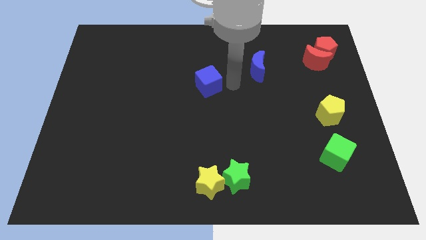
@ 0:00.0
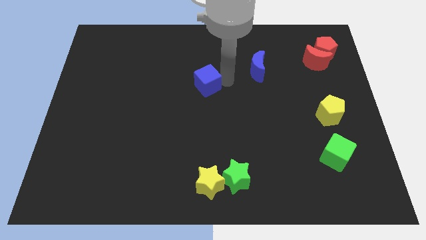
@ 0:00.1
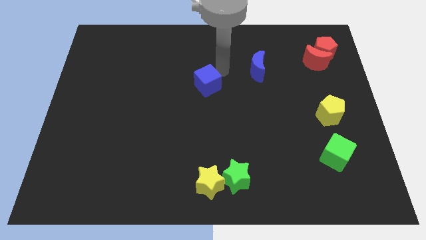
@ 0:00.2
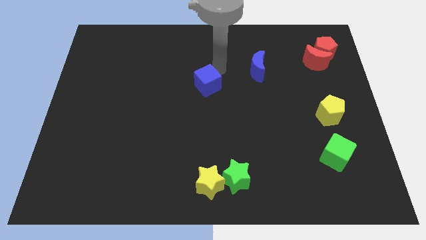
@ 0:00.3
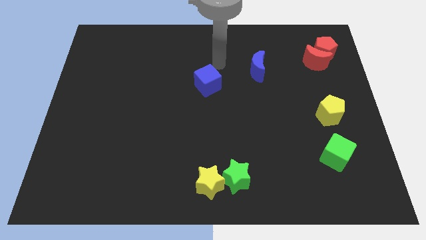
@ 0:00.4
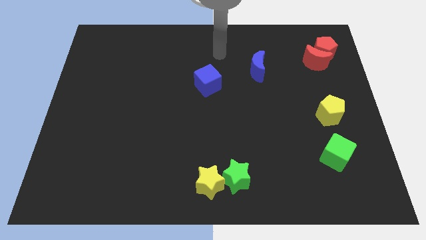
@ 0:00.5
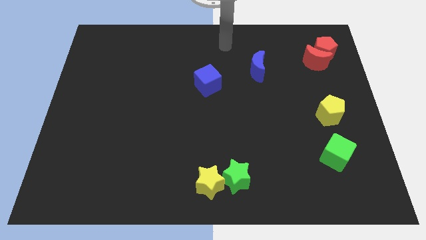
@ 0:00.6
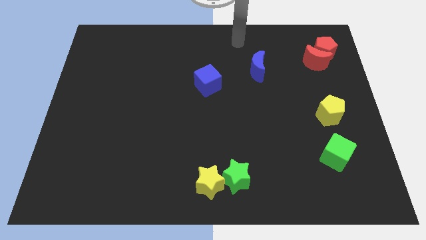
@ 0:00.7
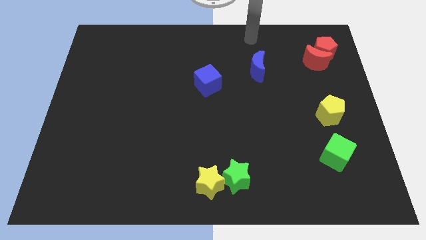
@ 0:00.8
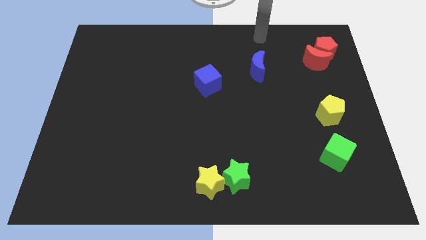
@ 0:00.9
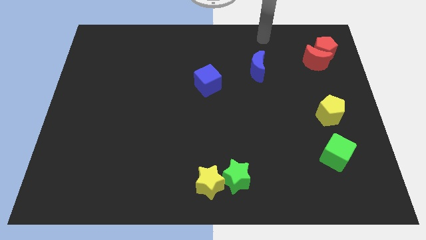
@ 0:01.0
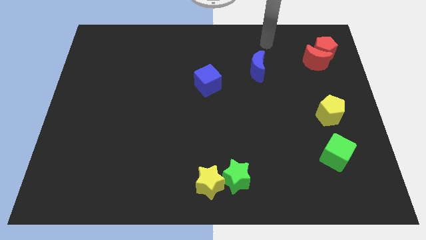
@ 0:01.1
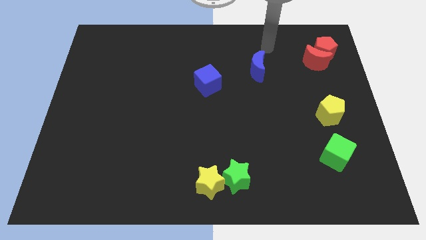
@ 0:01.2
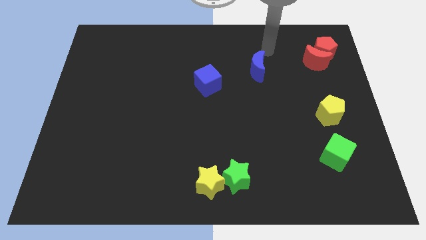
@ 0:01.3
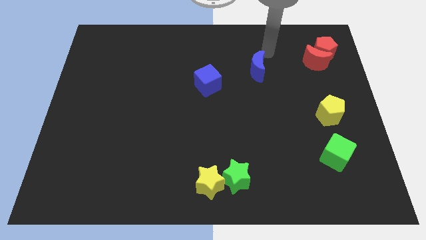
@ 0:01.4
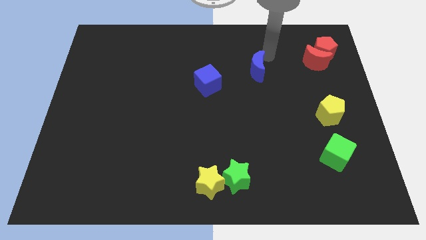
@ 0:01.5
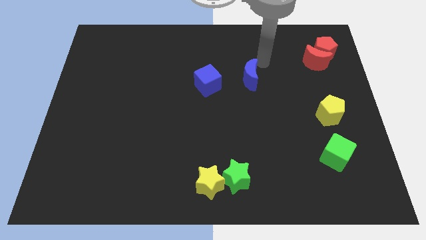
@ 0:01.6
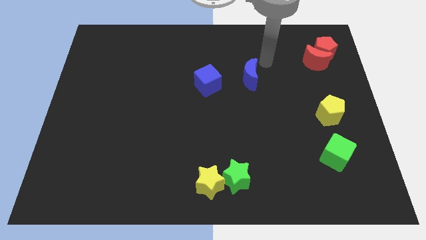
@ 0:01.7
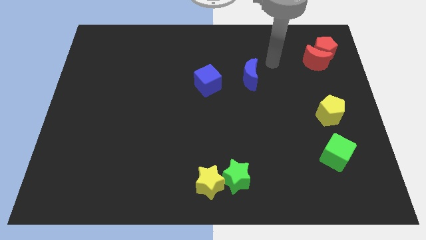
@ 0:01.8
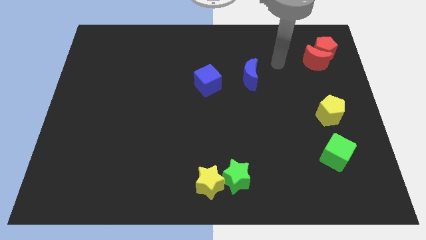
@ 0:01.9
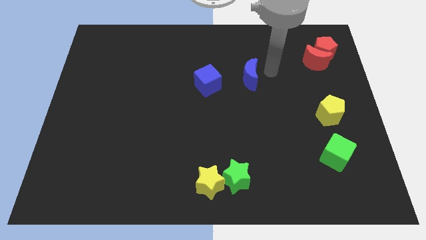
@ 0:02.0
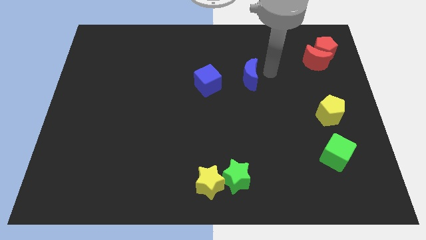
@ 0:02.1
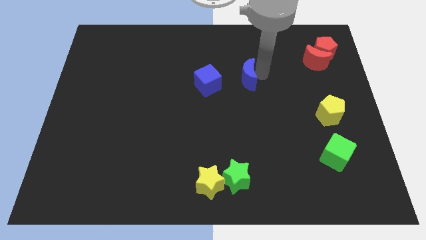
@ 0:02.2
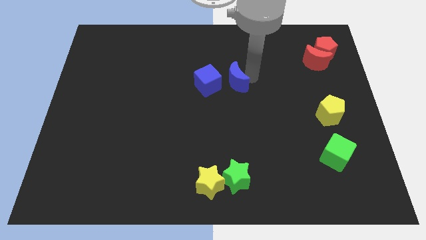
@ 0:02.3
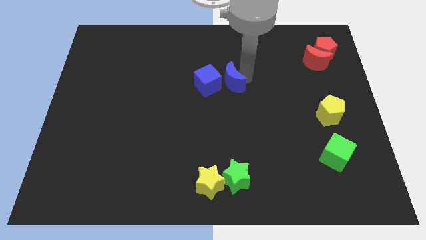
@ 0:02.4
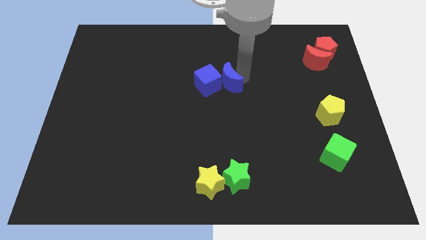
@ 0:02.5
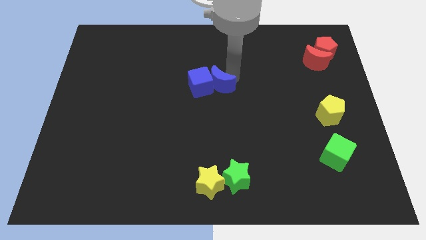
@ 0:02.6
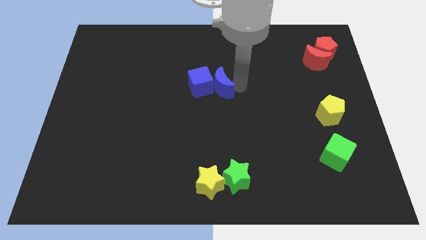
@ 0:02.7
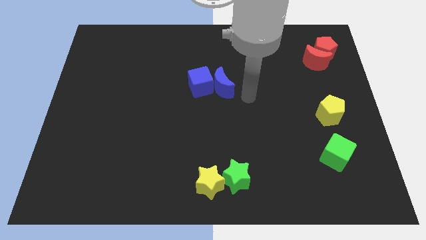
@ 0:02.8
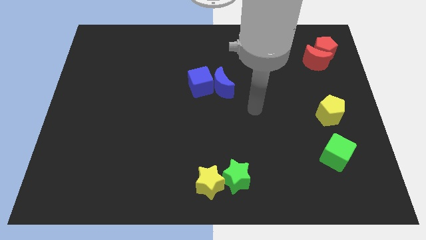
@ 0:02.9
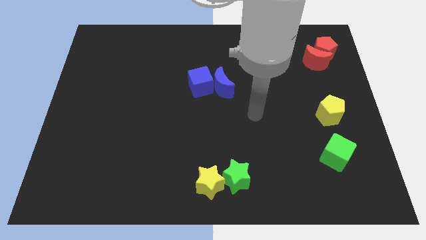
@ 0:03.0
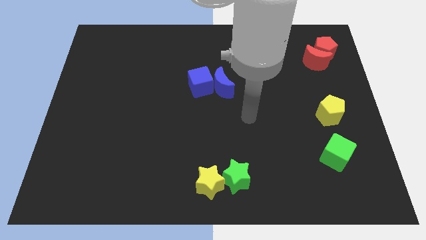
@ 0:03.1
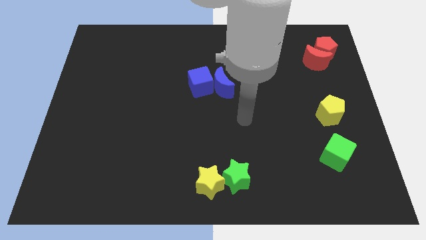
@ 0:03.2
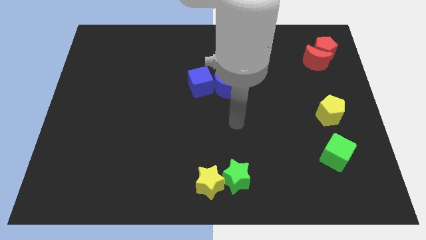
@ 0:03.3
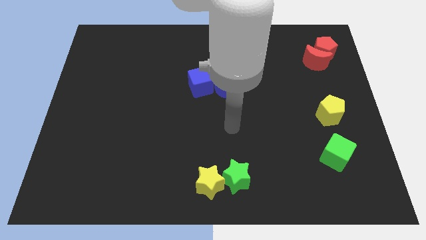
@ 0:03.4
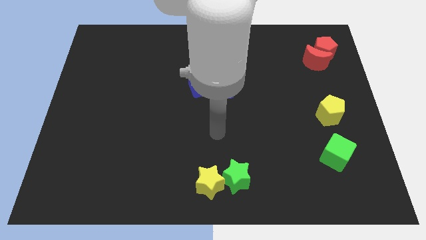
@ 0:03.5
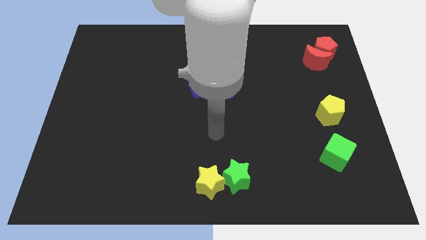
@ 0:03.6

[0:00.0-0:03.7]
move the blue crescent to the center of the board

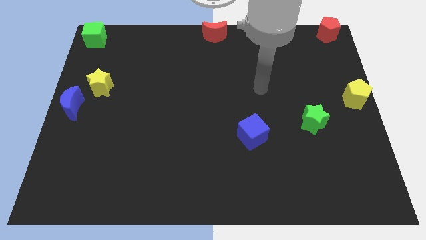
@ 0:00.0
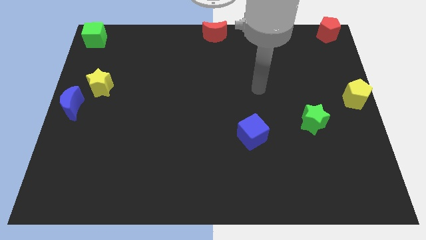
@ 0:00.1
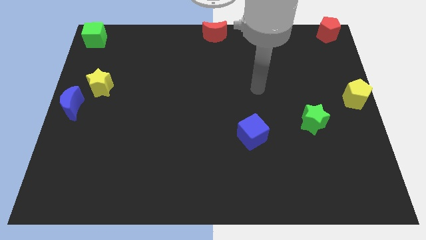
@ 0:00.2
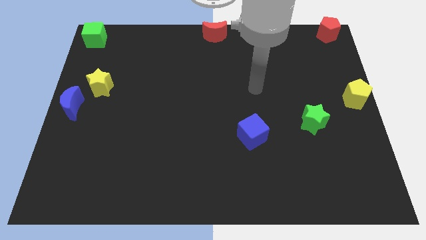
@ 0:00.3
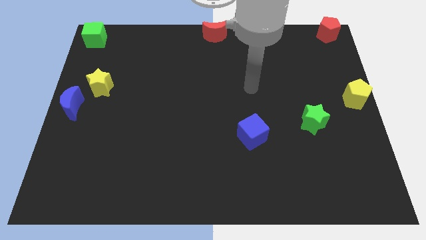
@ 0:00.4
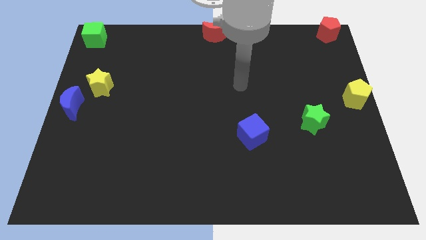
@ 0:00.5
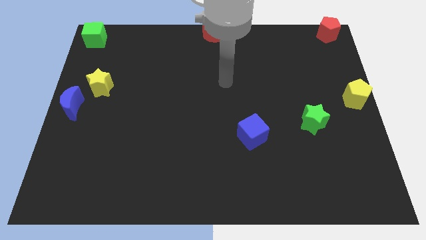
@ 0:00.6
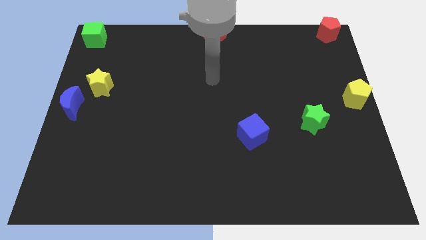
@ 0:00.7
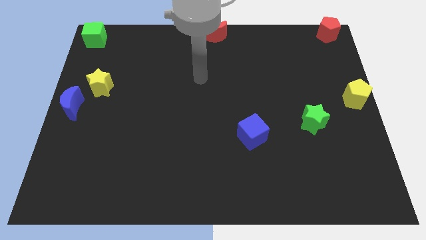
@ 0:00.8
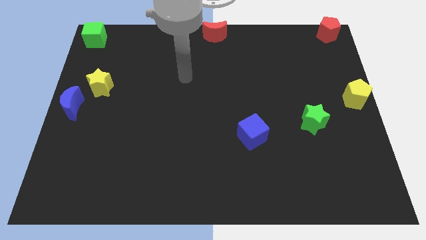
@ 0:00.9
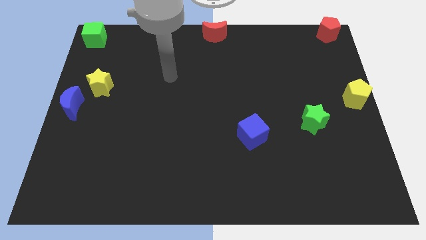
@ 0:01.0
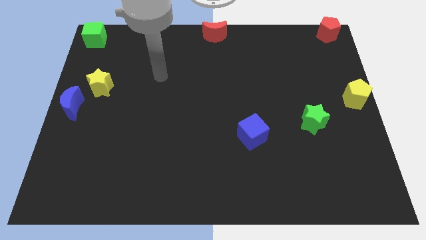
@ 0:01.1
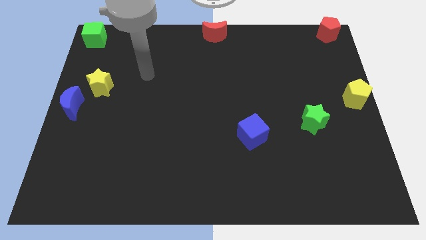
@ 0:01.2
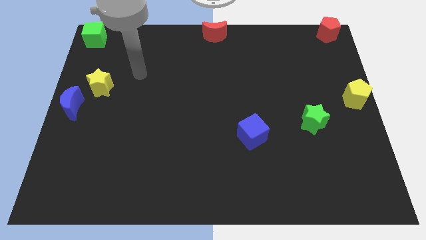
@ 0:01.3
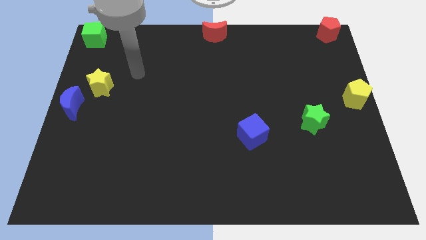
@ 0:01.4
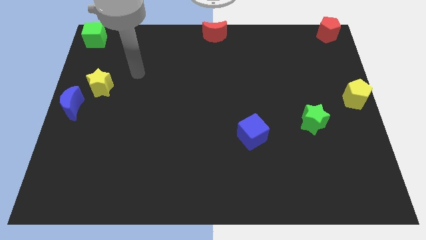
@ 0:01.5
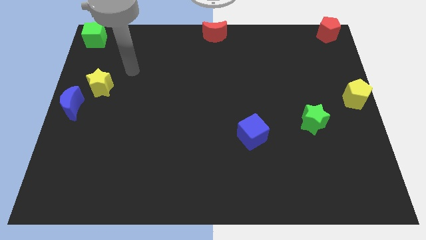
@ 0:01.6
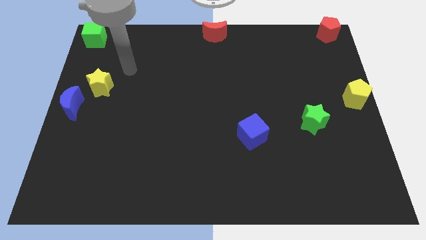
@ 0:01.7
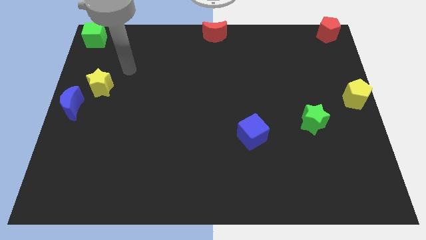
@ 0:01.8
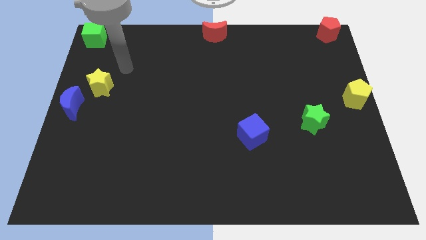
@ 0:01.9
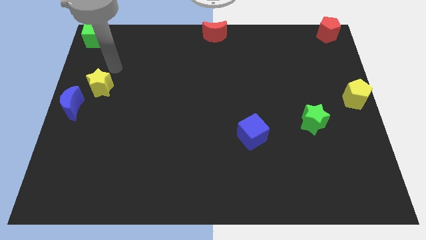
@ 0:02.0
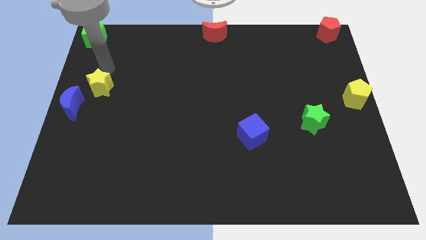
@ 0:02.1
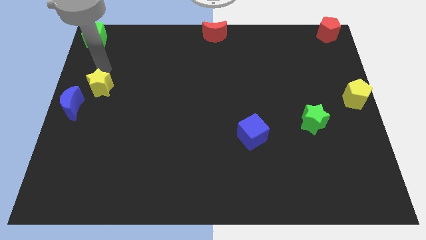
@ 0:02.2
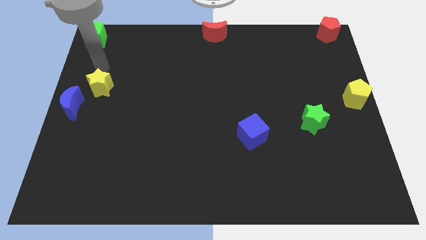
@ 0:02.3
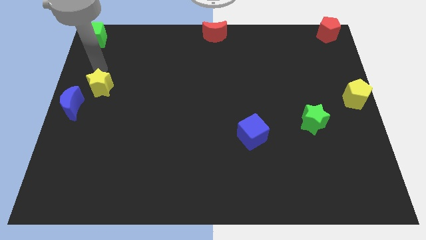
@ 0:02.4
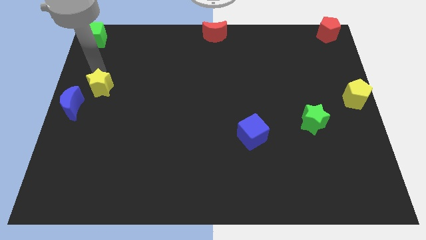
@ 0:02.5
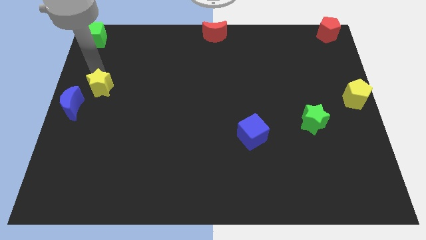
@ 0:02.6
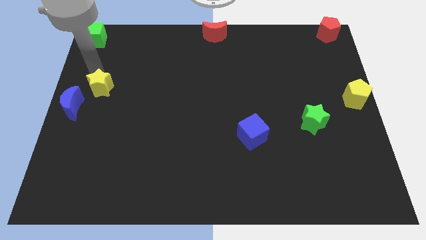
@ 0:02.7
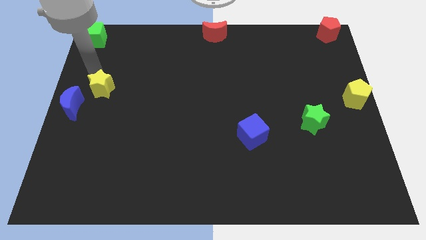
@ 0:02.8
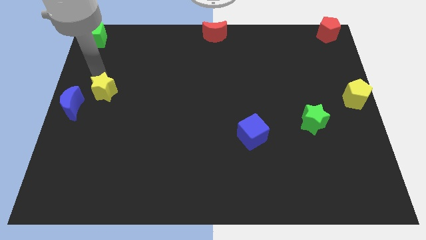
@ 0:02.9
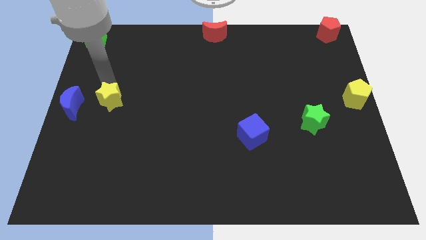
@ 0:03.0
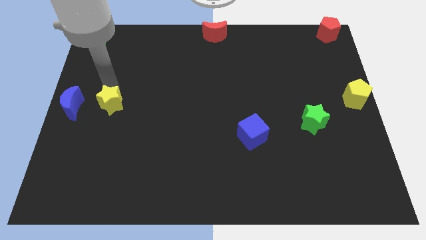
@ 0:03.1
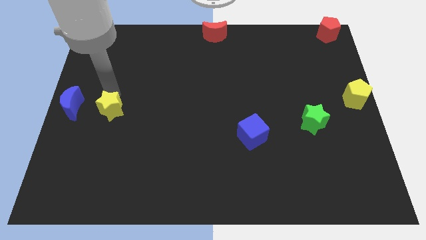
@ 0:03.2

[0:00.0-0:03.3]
place the yellow star to the right side of the blue moon

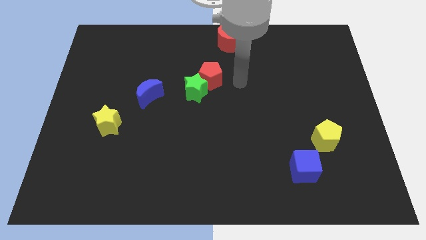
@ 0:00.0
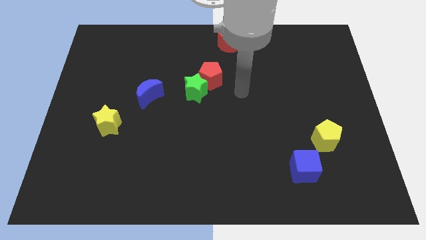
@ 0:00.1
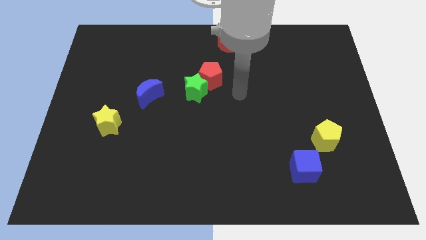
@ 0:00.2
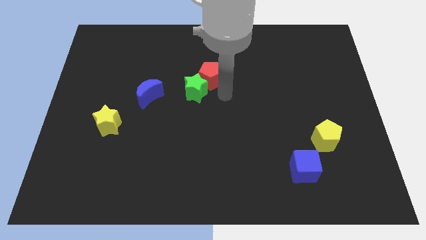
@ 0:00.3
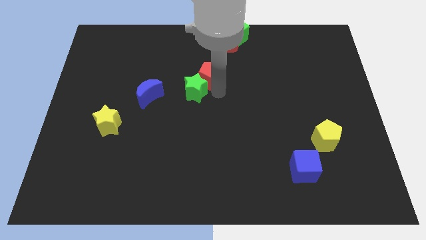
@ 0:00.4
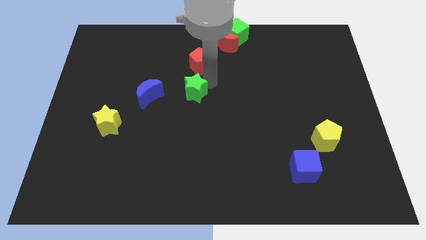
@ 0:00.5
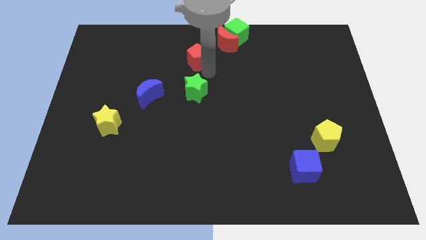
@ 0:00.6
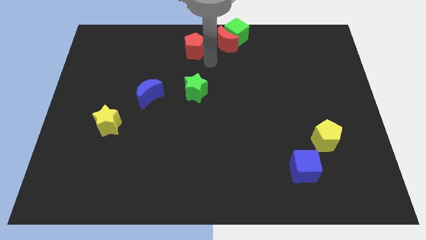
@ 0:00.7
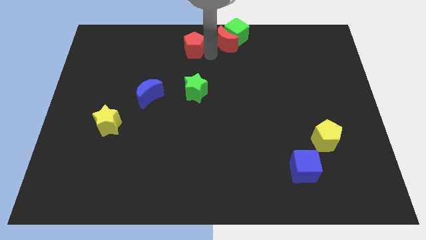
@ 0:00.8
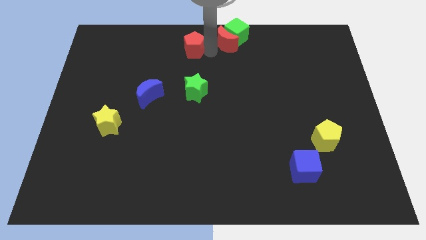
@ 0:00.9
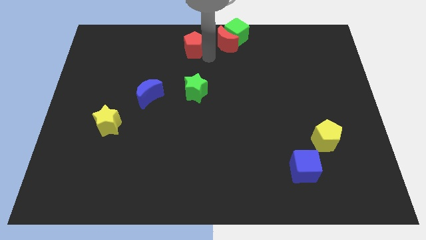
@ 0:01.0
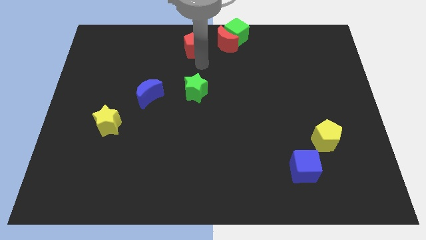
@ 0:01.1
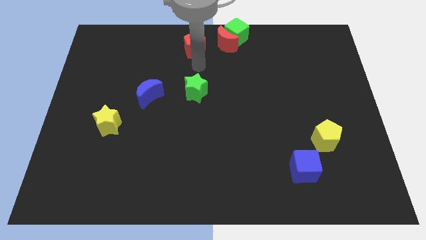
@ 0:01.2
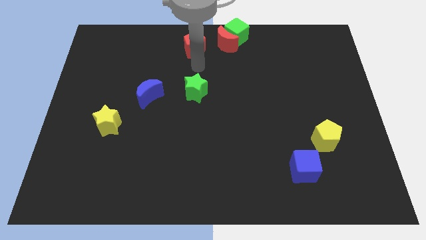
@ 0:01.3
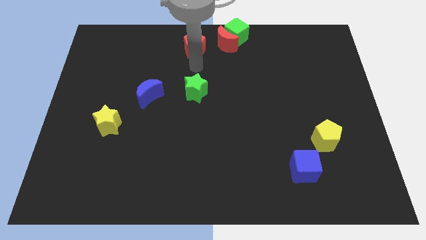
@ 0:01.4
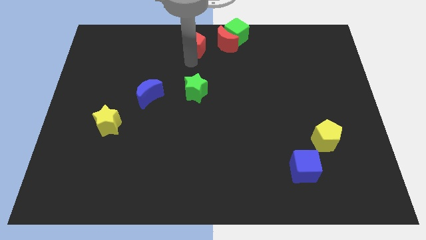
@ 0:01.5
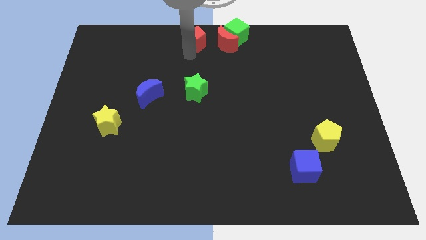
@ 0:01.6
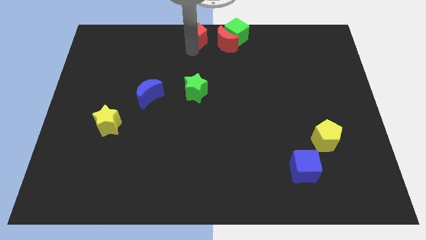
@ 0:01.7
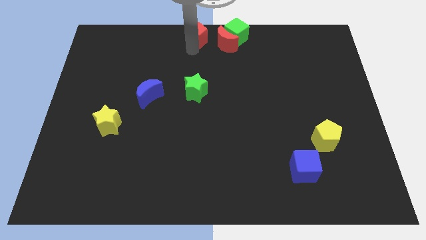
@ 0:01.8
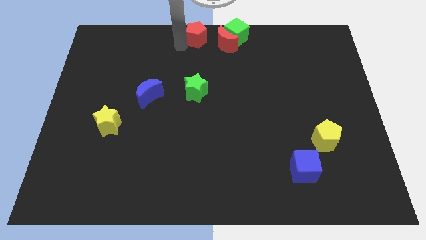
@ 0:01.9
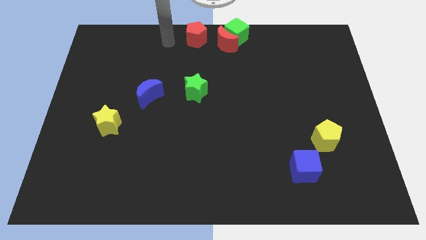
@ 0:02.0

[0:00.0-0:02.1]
push the red pentagon to the top center of the board
